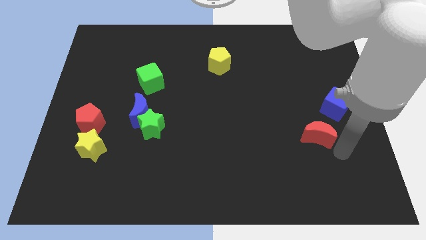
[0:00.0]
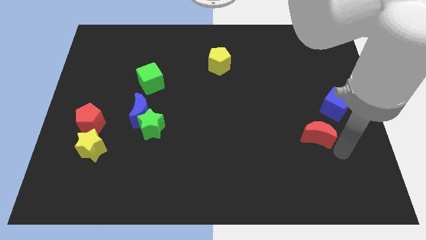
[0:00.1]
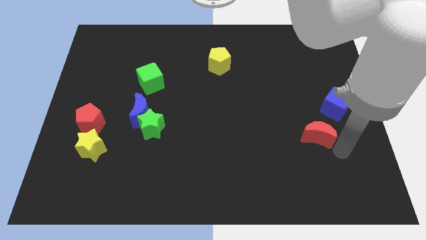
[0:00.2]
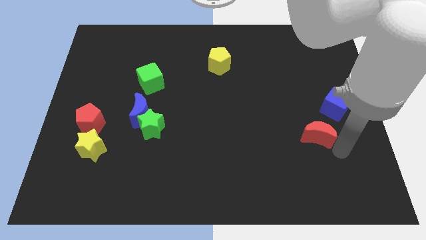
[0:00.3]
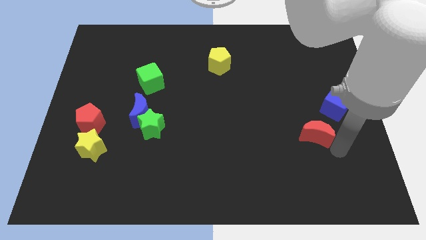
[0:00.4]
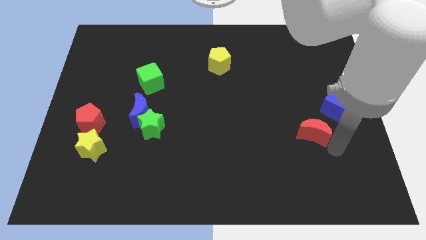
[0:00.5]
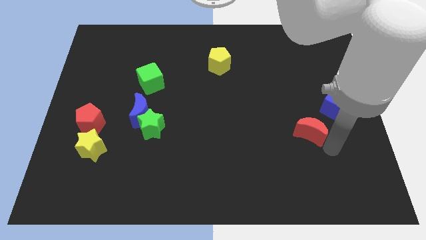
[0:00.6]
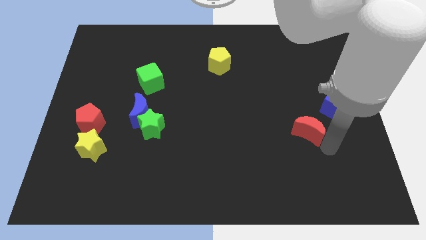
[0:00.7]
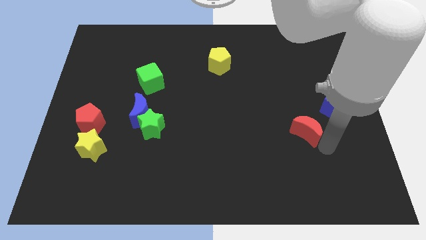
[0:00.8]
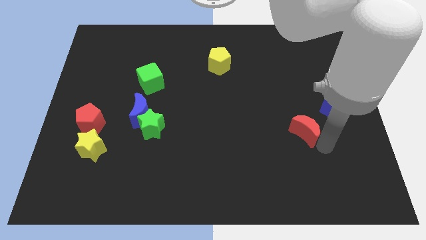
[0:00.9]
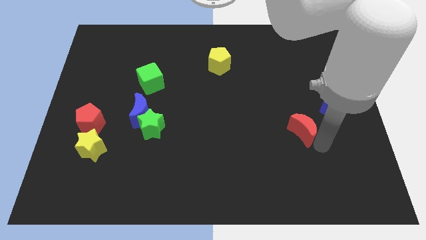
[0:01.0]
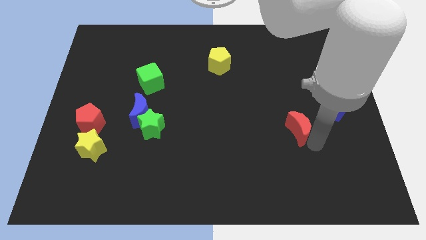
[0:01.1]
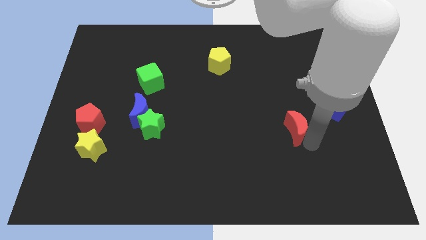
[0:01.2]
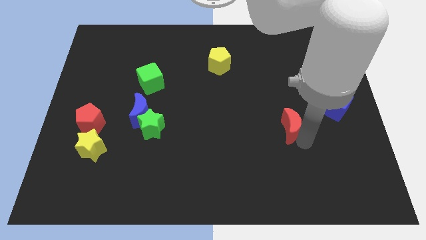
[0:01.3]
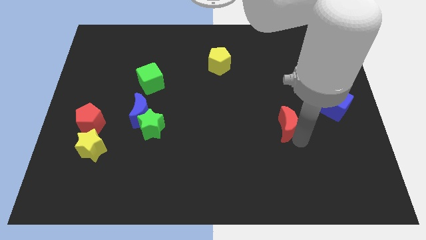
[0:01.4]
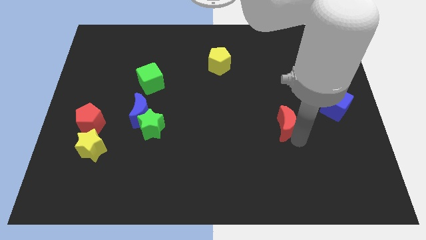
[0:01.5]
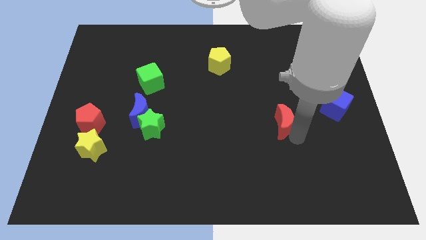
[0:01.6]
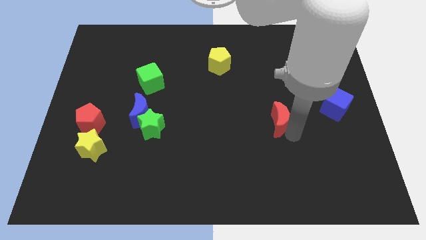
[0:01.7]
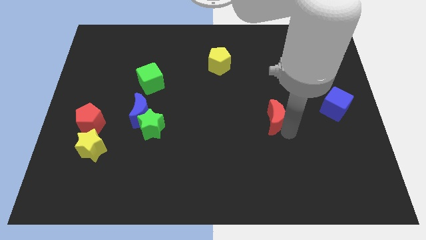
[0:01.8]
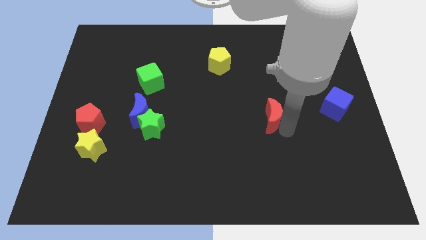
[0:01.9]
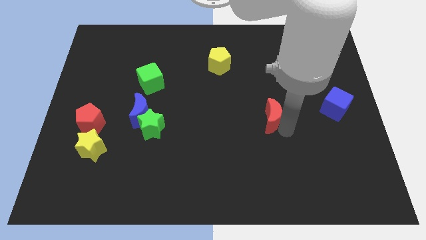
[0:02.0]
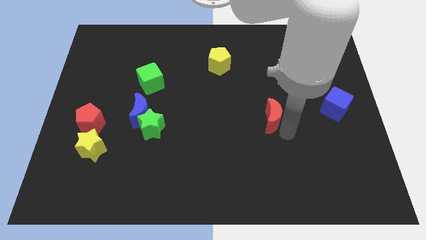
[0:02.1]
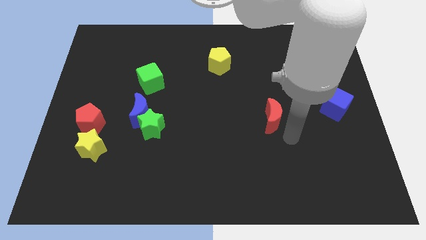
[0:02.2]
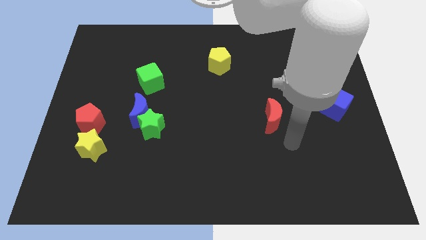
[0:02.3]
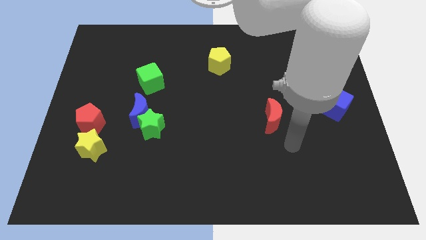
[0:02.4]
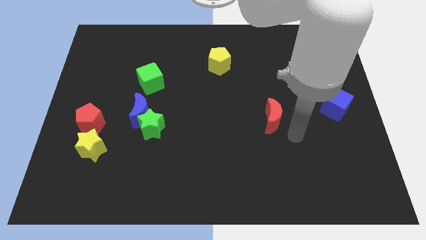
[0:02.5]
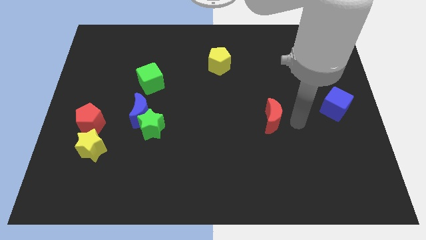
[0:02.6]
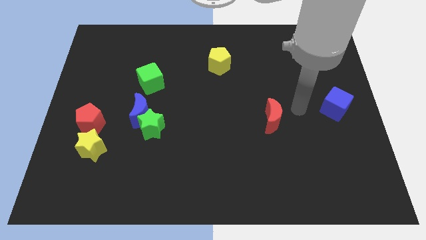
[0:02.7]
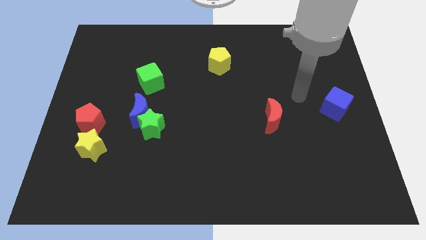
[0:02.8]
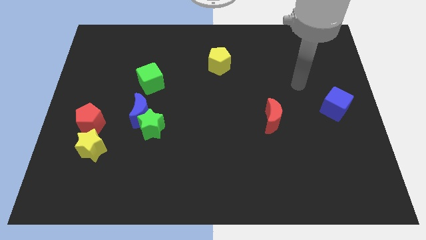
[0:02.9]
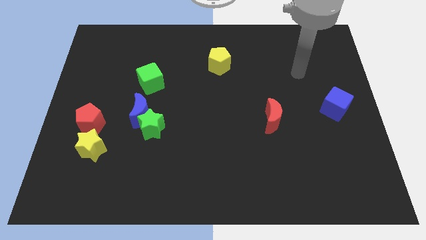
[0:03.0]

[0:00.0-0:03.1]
push the red crescent to the left of the blue cube

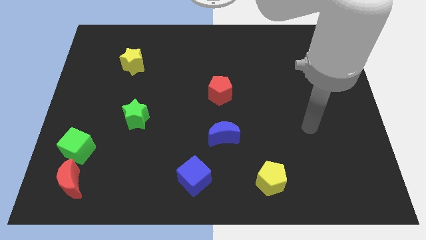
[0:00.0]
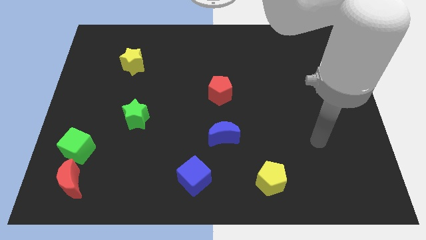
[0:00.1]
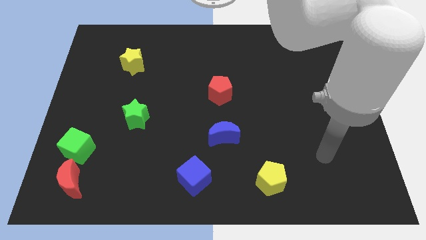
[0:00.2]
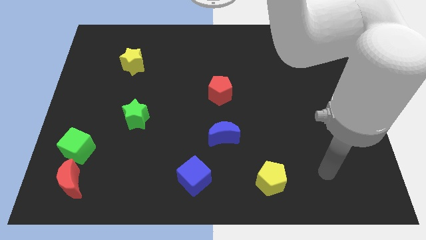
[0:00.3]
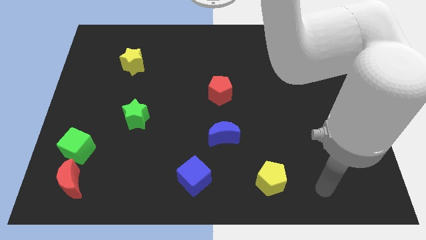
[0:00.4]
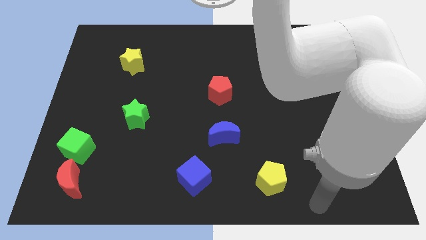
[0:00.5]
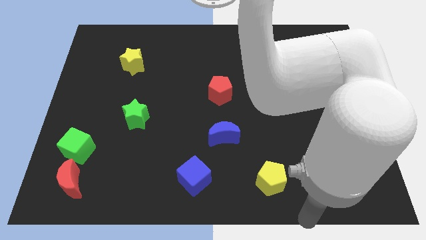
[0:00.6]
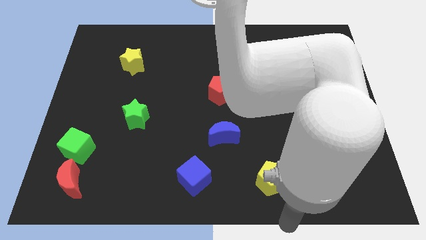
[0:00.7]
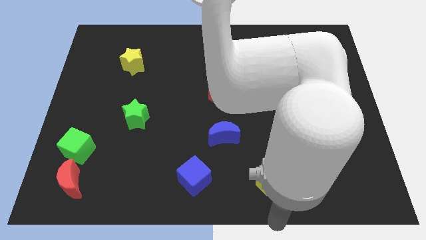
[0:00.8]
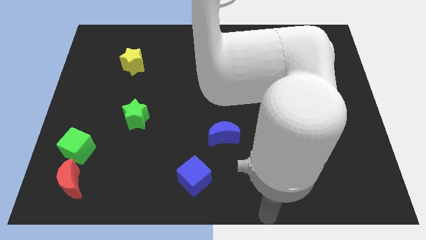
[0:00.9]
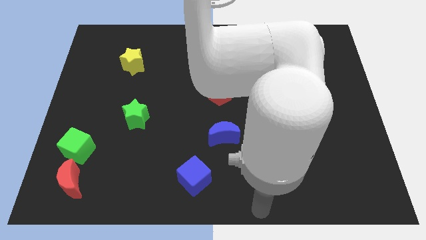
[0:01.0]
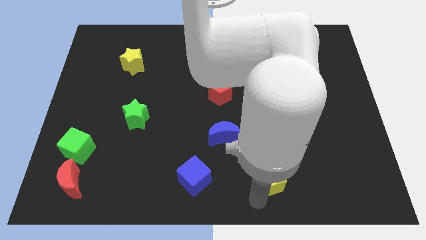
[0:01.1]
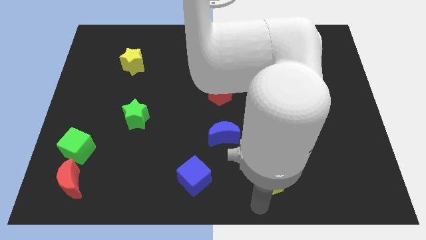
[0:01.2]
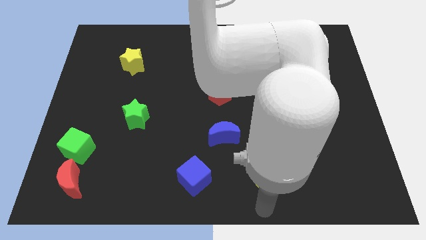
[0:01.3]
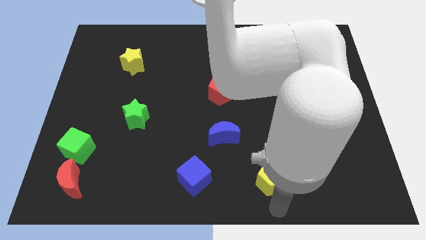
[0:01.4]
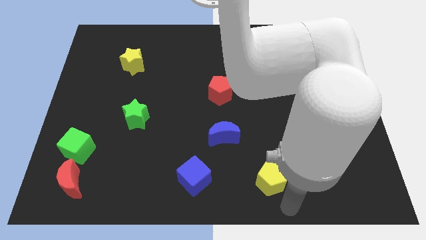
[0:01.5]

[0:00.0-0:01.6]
place the arm at the bottom of the yellow pentagon

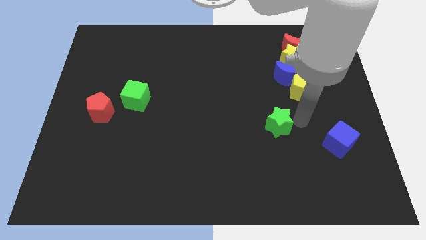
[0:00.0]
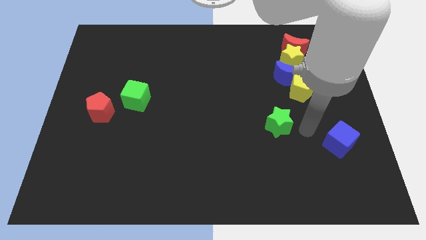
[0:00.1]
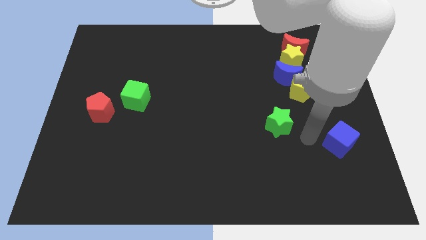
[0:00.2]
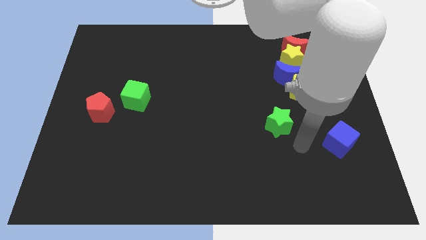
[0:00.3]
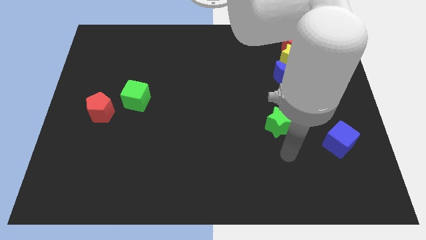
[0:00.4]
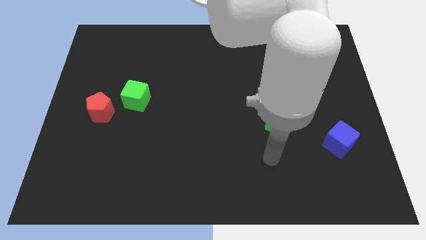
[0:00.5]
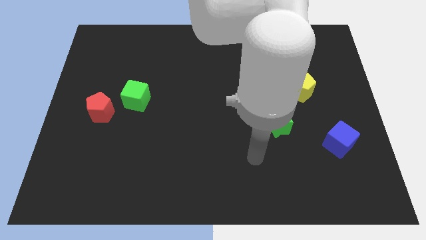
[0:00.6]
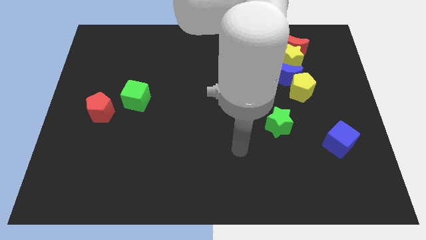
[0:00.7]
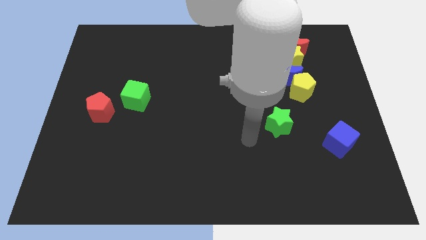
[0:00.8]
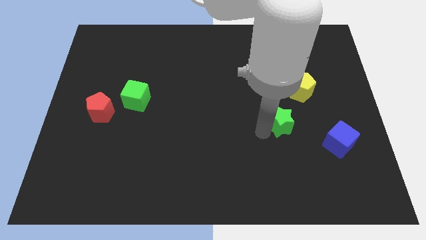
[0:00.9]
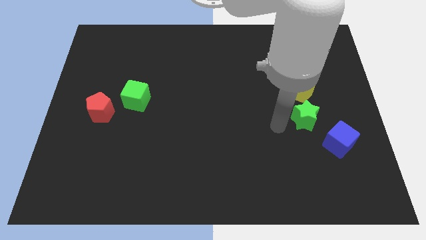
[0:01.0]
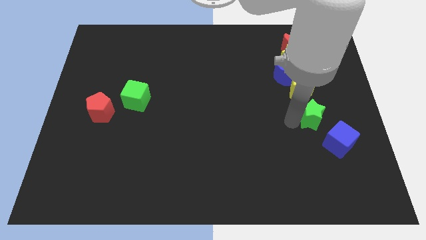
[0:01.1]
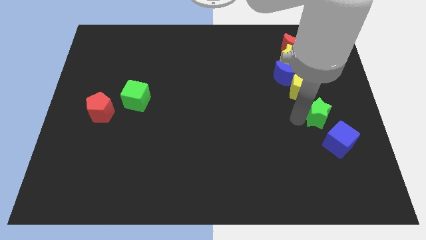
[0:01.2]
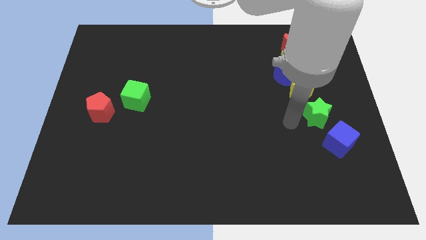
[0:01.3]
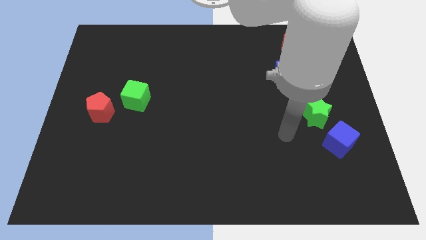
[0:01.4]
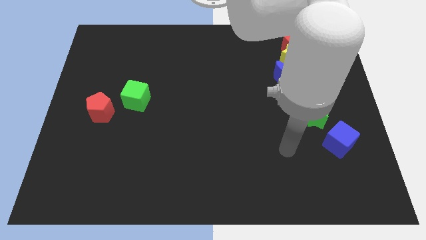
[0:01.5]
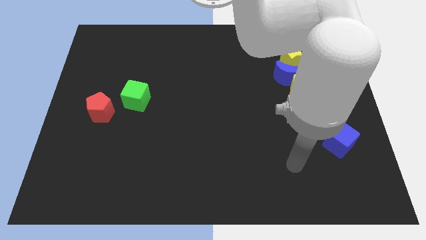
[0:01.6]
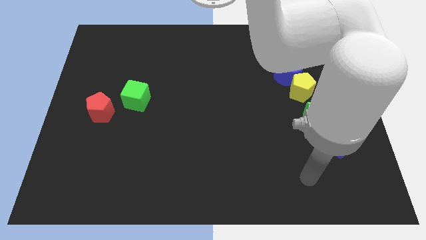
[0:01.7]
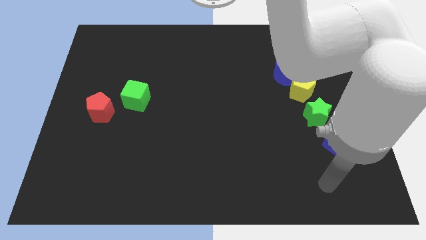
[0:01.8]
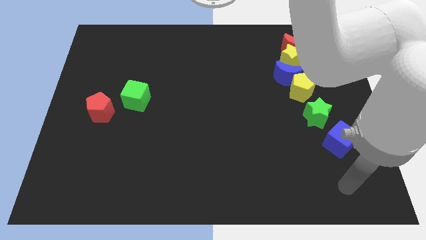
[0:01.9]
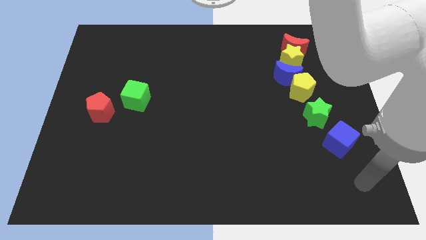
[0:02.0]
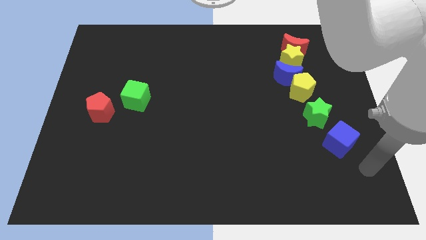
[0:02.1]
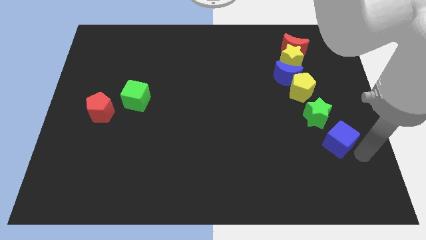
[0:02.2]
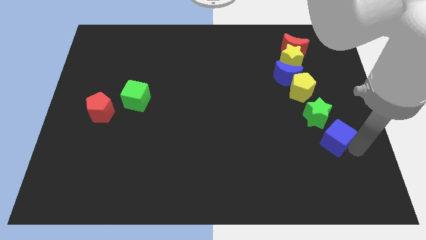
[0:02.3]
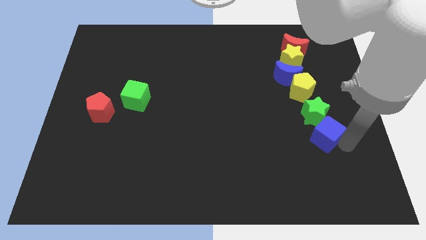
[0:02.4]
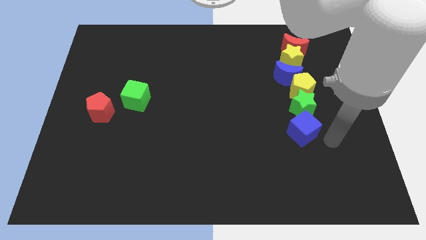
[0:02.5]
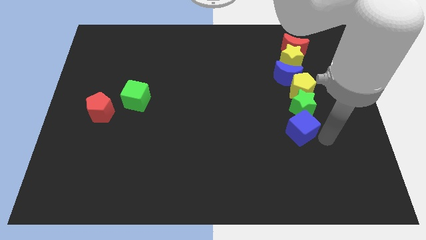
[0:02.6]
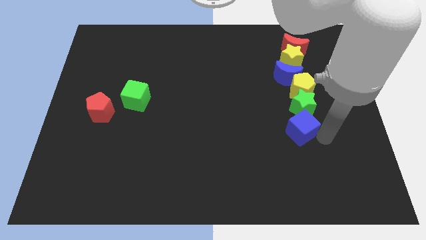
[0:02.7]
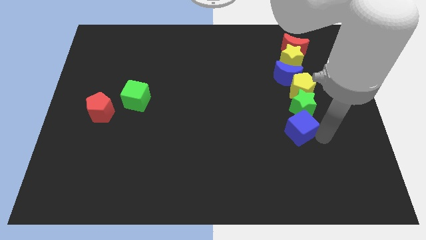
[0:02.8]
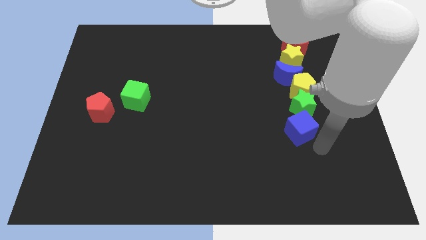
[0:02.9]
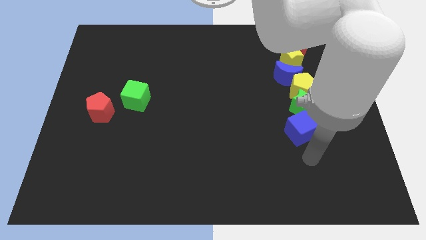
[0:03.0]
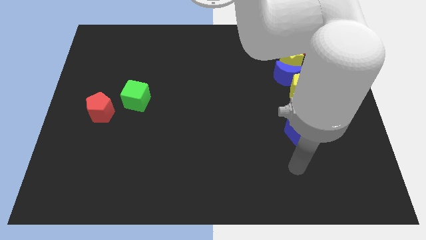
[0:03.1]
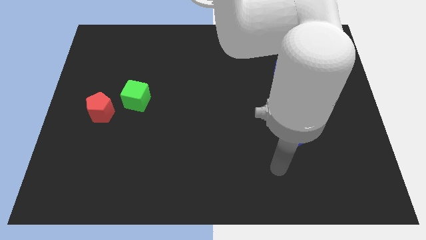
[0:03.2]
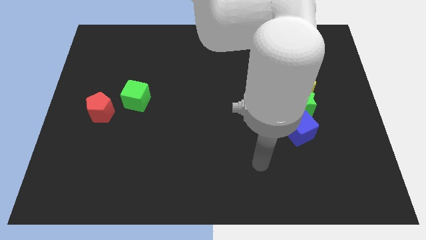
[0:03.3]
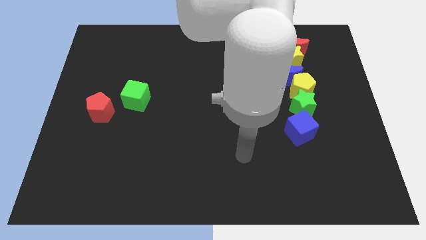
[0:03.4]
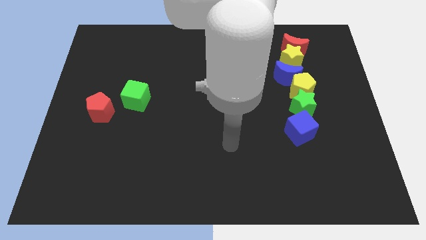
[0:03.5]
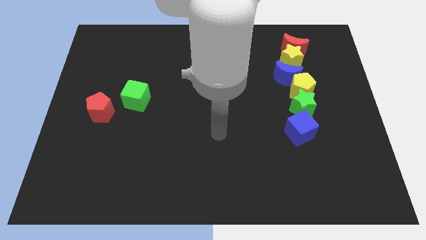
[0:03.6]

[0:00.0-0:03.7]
move the green star below the yellow pentagon

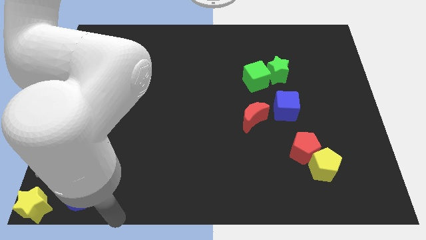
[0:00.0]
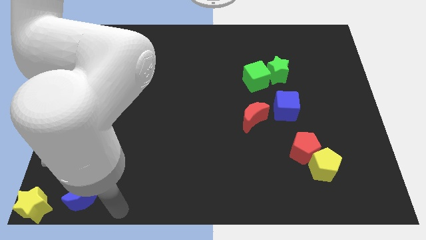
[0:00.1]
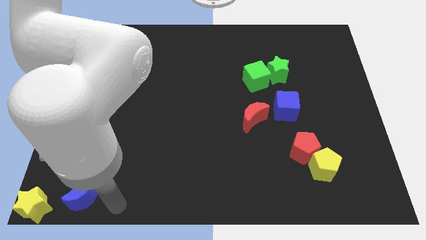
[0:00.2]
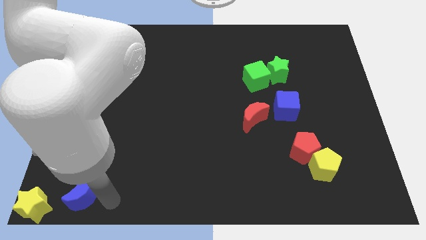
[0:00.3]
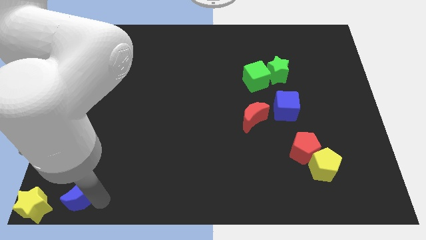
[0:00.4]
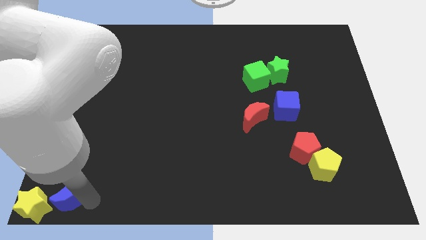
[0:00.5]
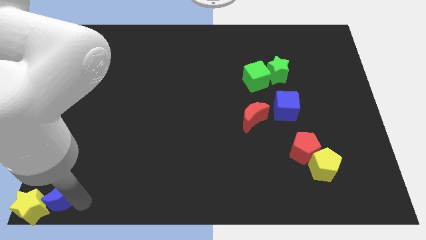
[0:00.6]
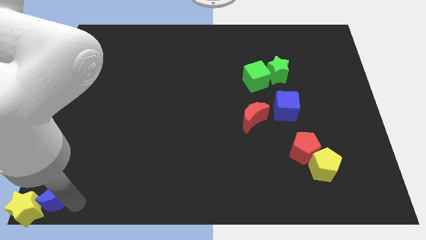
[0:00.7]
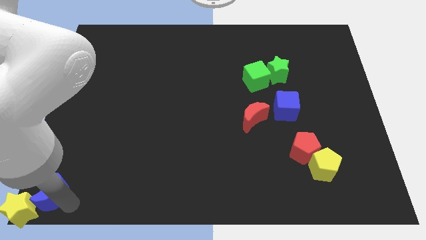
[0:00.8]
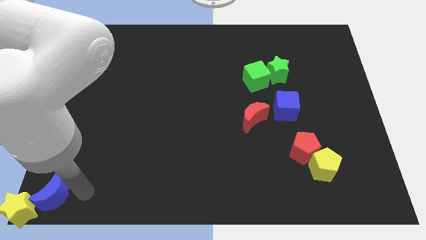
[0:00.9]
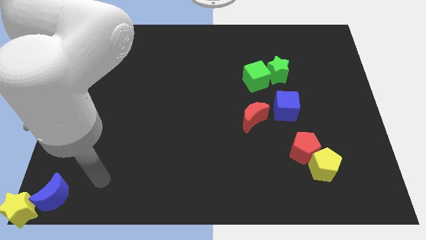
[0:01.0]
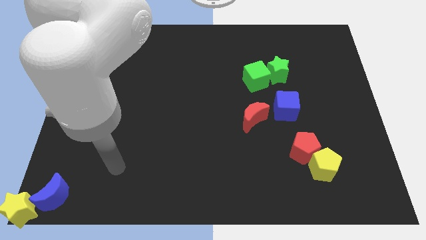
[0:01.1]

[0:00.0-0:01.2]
push the blue moon into the yellow star
